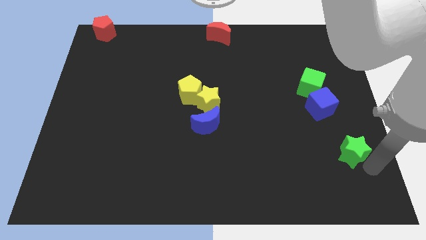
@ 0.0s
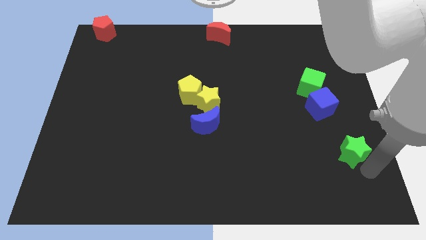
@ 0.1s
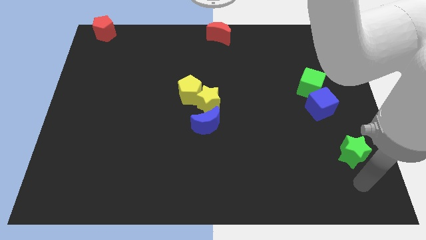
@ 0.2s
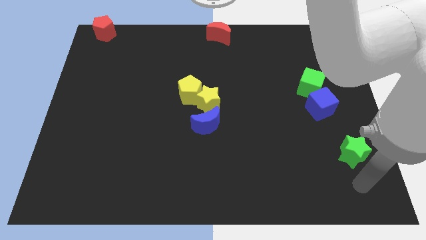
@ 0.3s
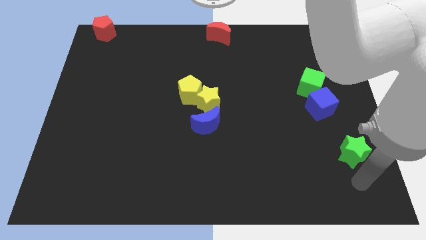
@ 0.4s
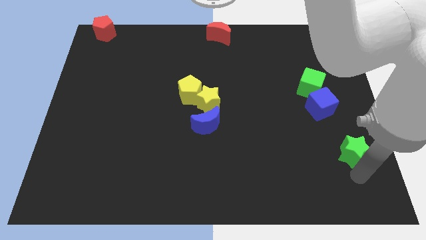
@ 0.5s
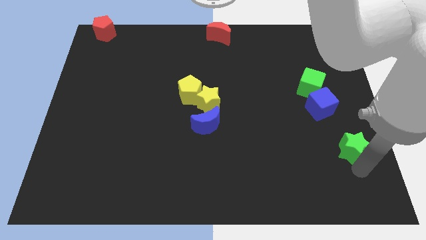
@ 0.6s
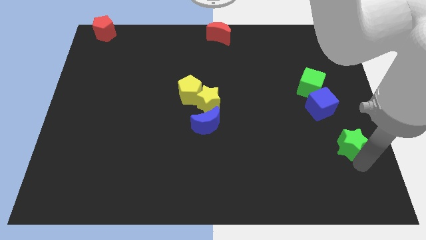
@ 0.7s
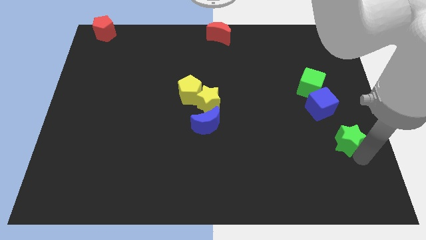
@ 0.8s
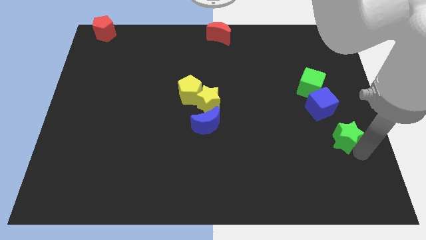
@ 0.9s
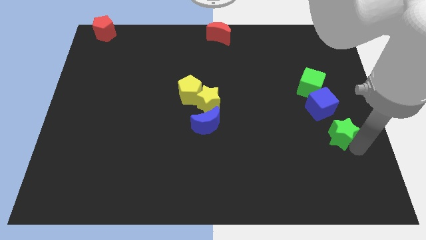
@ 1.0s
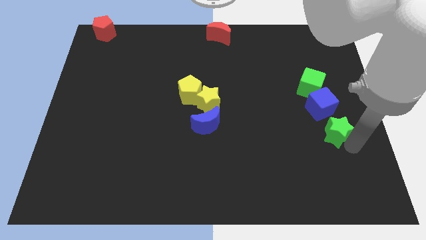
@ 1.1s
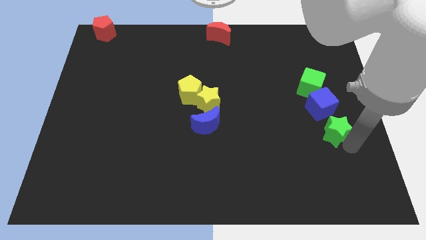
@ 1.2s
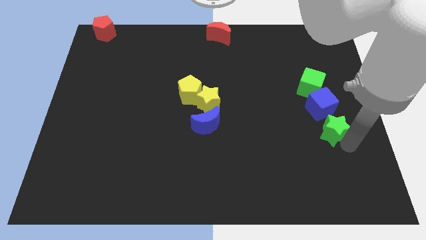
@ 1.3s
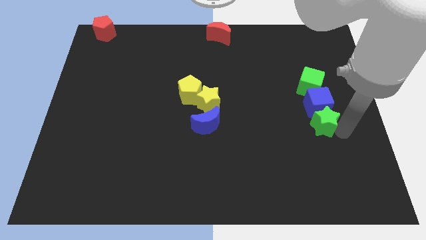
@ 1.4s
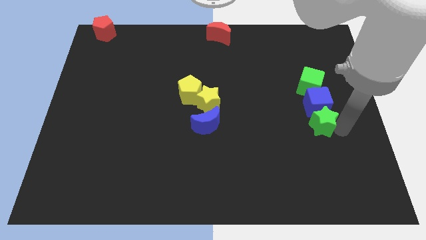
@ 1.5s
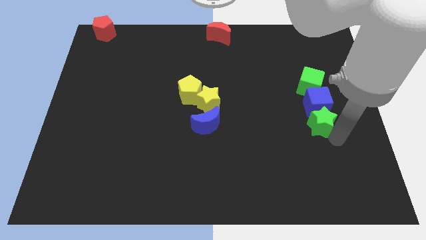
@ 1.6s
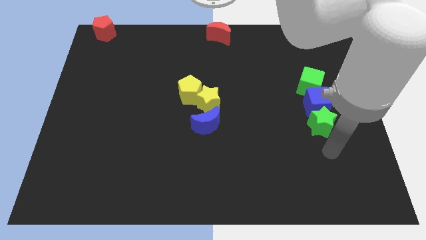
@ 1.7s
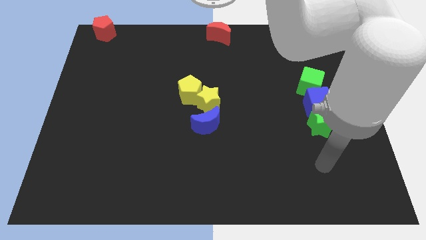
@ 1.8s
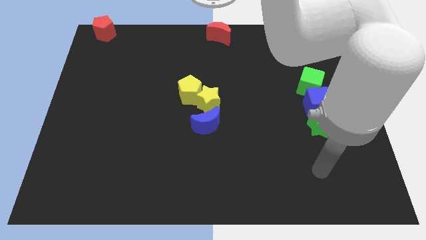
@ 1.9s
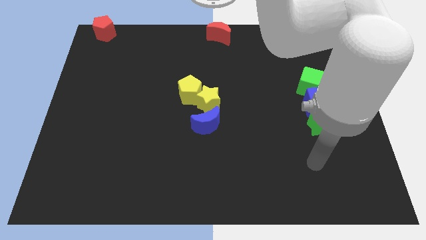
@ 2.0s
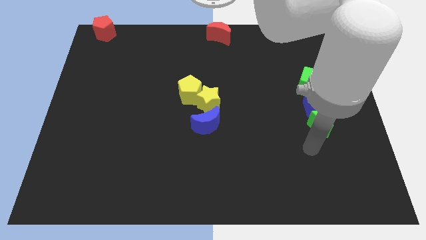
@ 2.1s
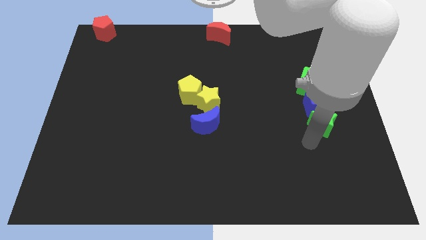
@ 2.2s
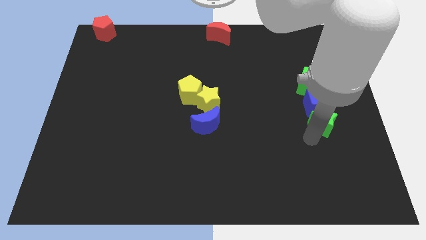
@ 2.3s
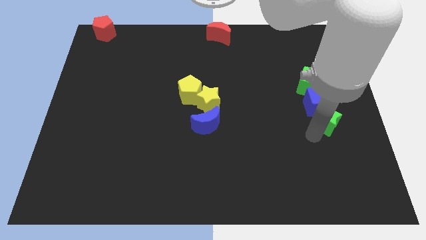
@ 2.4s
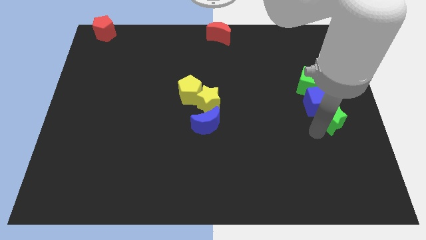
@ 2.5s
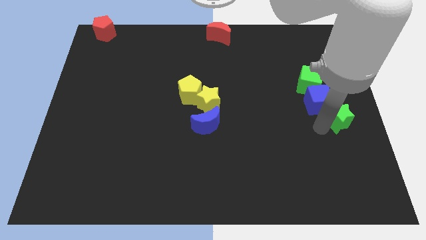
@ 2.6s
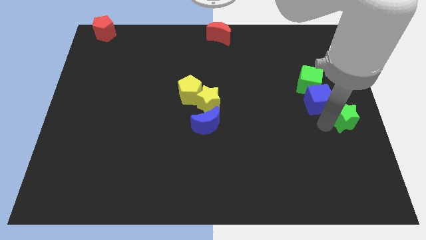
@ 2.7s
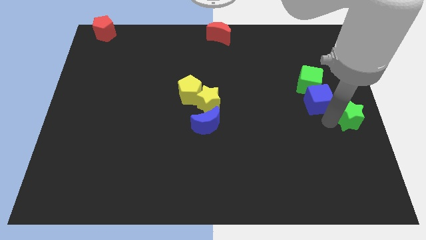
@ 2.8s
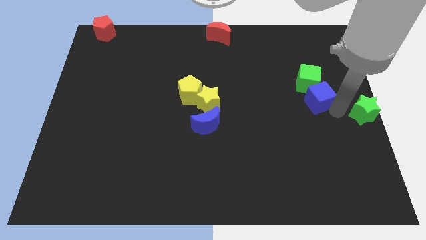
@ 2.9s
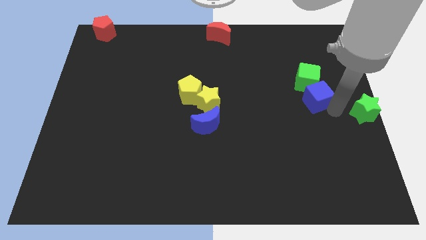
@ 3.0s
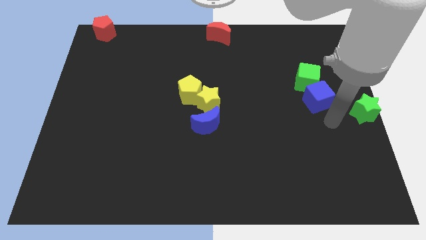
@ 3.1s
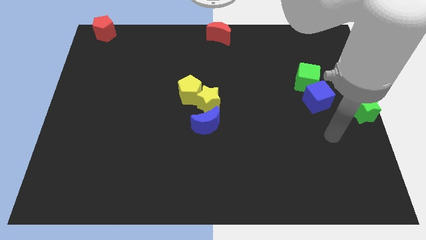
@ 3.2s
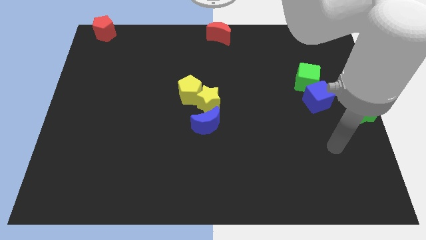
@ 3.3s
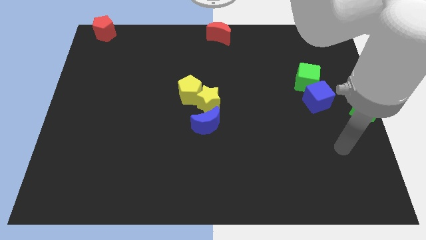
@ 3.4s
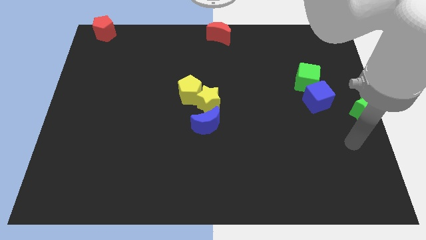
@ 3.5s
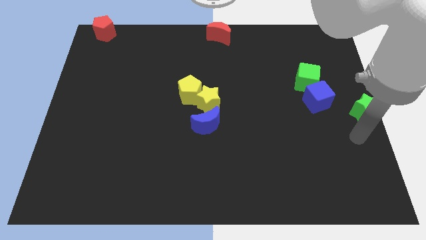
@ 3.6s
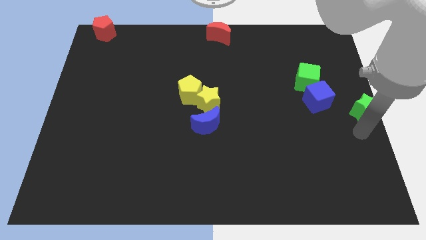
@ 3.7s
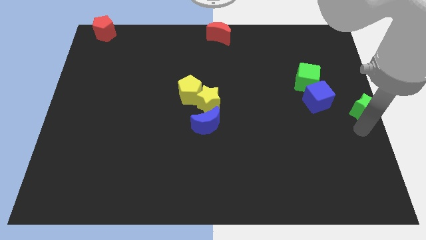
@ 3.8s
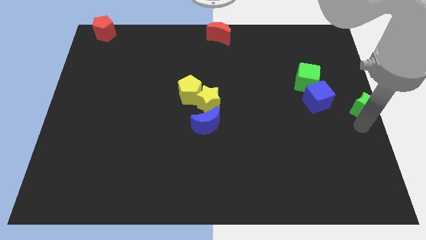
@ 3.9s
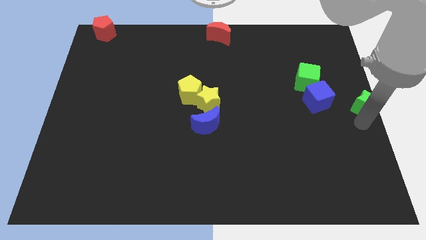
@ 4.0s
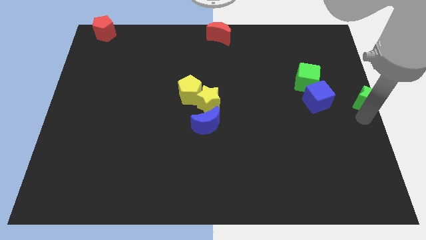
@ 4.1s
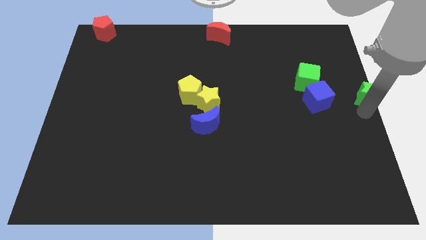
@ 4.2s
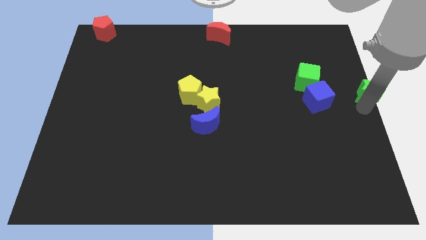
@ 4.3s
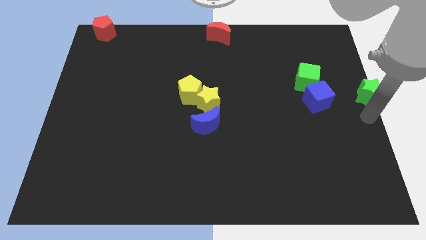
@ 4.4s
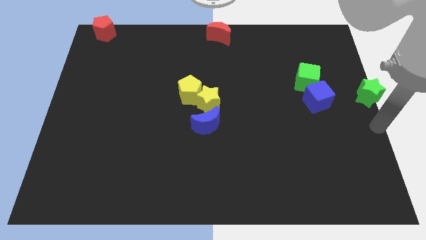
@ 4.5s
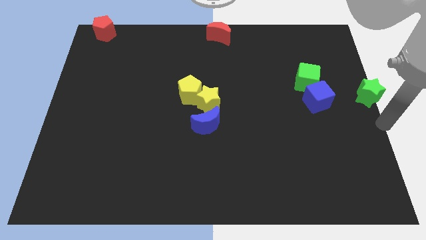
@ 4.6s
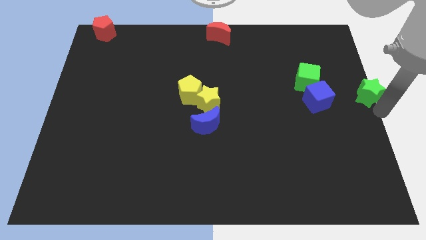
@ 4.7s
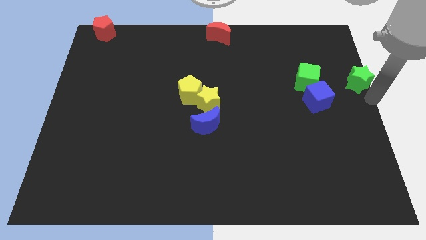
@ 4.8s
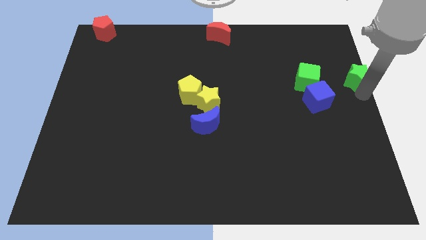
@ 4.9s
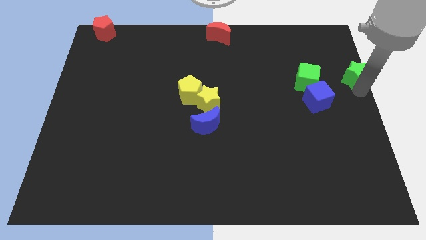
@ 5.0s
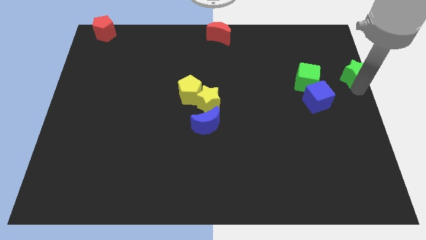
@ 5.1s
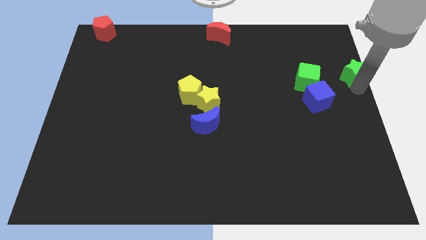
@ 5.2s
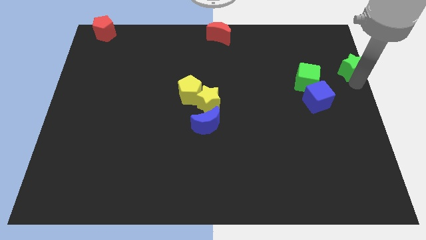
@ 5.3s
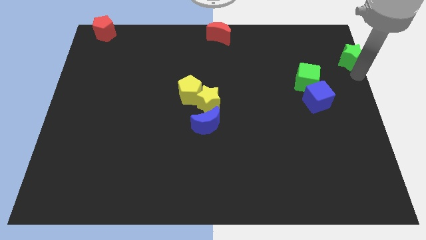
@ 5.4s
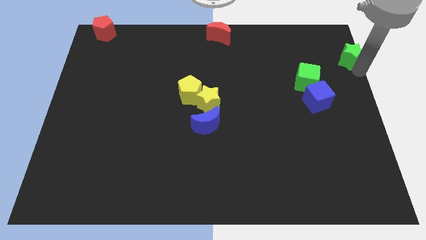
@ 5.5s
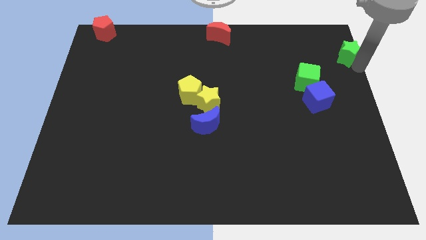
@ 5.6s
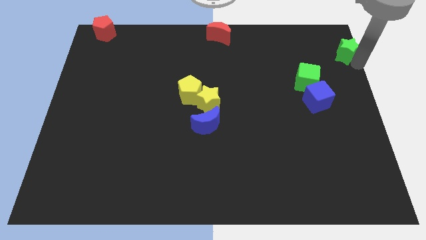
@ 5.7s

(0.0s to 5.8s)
slide the green star towards top right corner

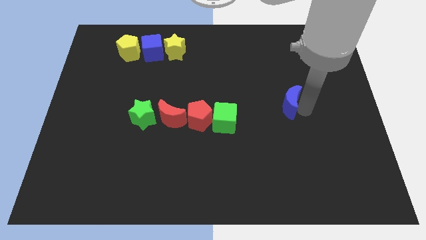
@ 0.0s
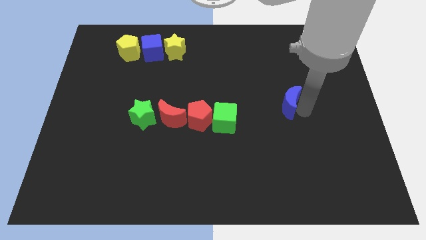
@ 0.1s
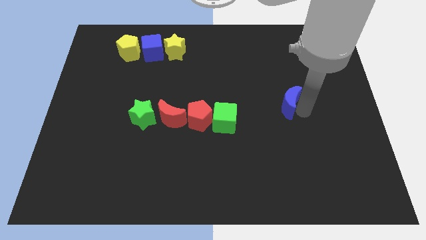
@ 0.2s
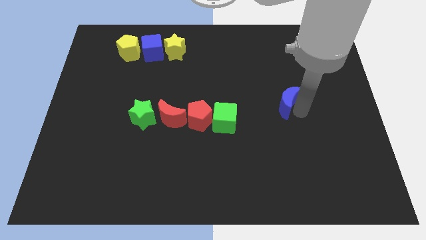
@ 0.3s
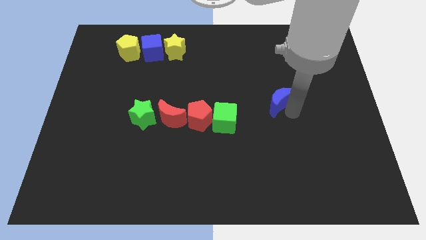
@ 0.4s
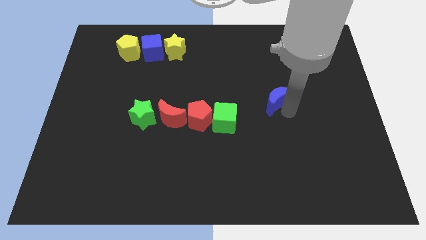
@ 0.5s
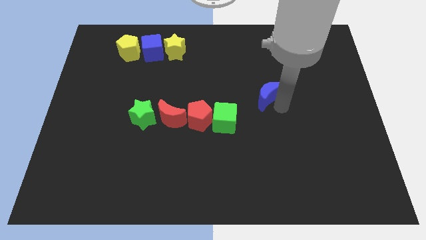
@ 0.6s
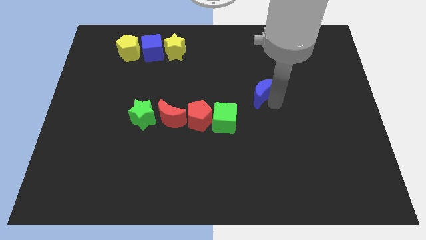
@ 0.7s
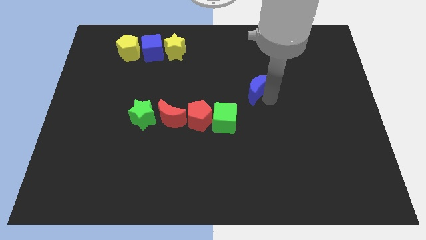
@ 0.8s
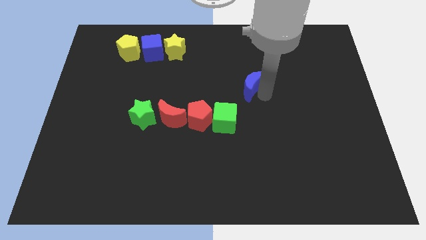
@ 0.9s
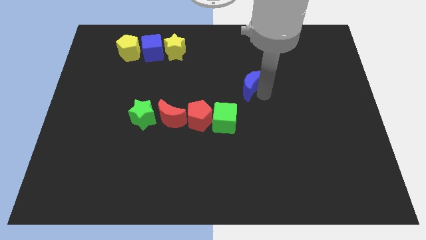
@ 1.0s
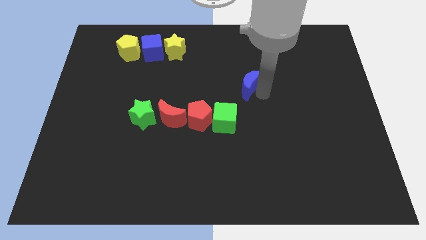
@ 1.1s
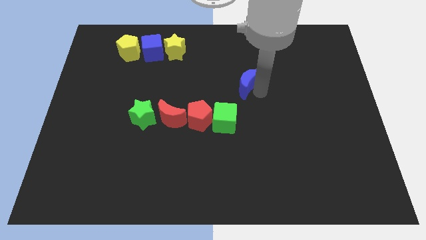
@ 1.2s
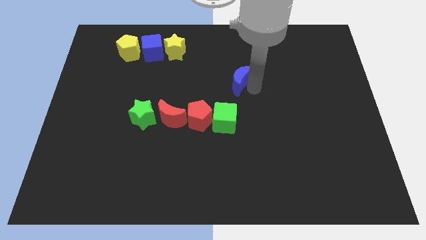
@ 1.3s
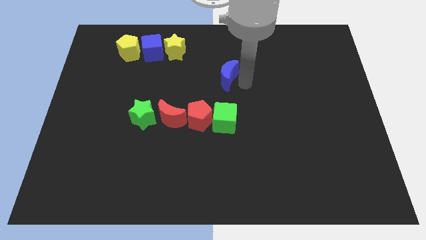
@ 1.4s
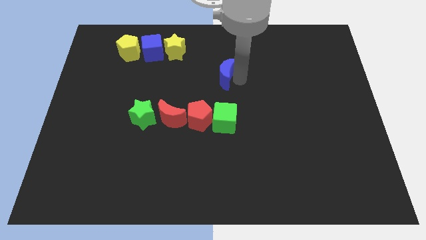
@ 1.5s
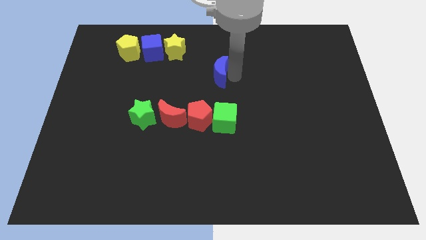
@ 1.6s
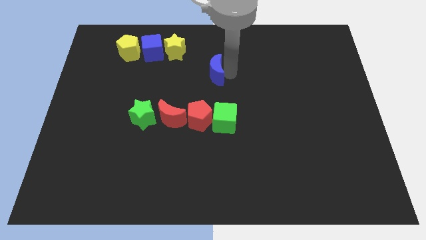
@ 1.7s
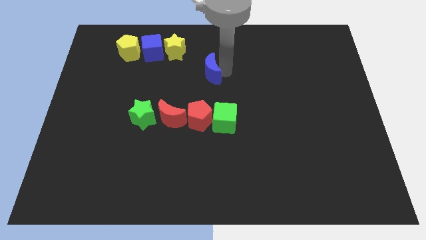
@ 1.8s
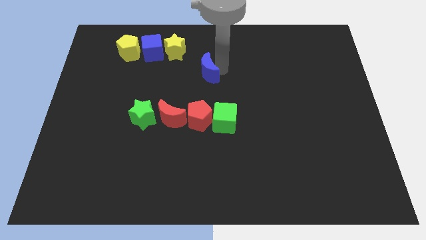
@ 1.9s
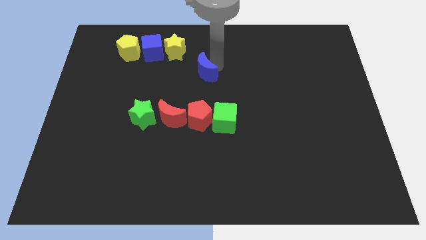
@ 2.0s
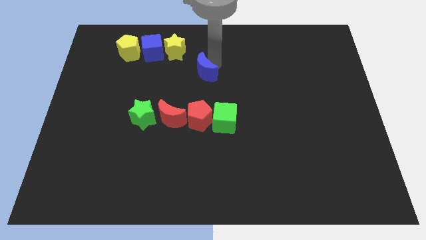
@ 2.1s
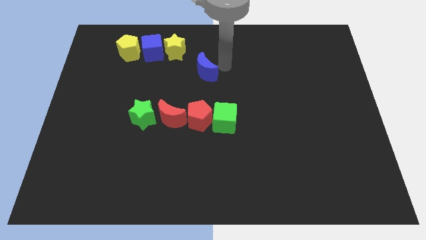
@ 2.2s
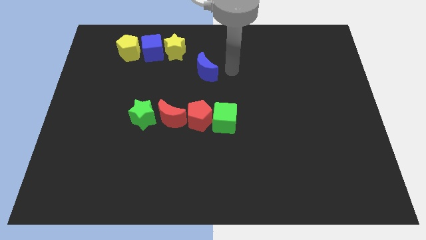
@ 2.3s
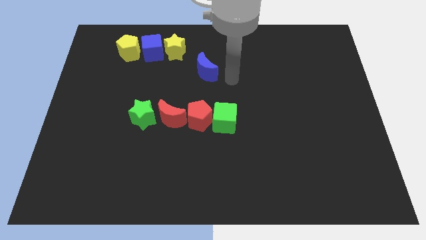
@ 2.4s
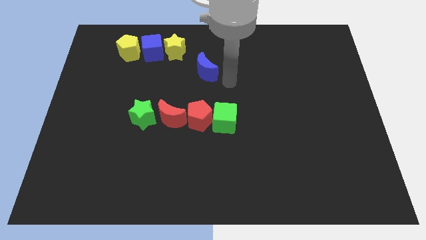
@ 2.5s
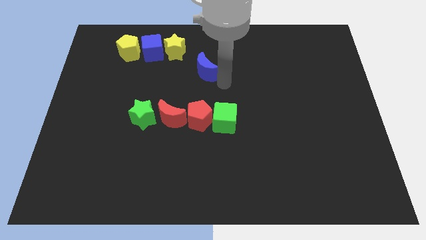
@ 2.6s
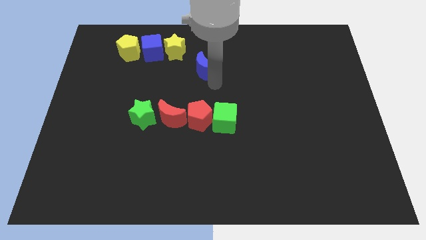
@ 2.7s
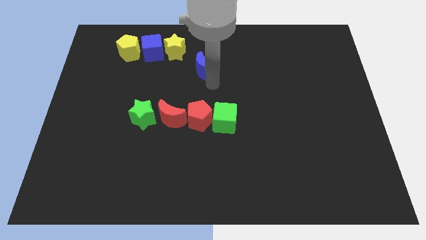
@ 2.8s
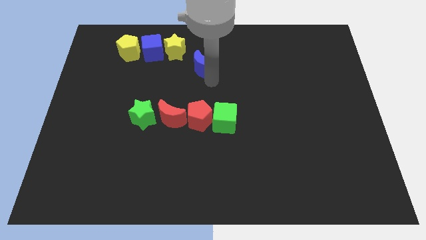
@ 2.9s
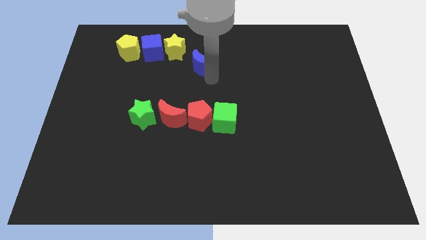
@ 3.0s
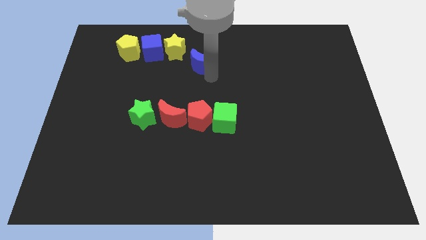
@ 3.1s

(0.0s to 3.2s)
move blue crescent towards top
